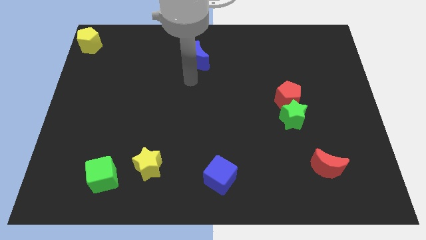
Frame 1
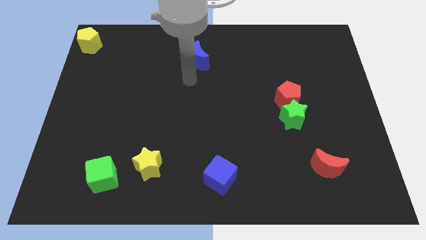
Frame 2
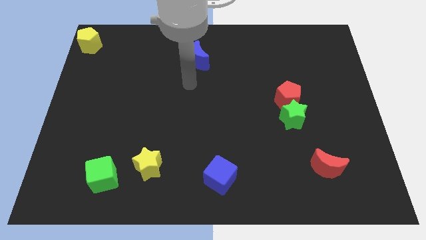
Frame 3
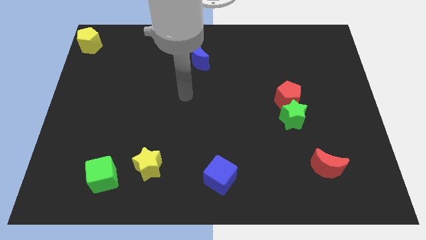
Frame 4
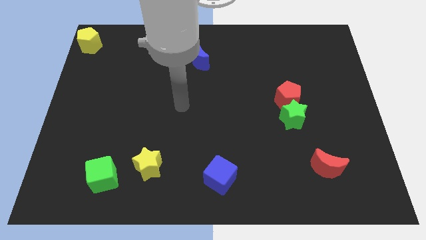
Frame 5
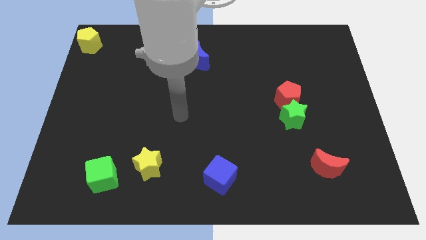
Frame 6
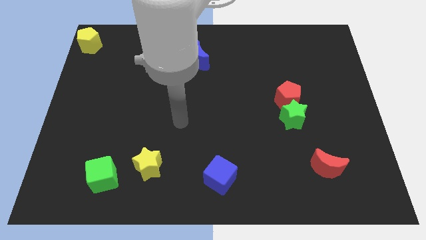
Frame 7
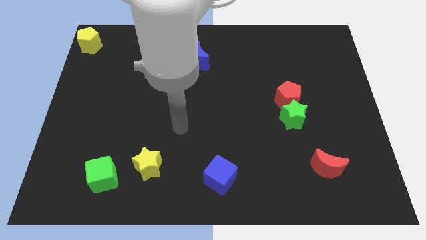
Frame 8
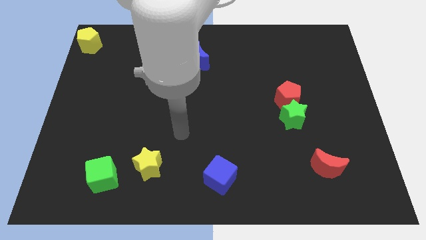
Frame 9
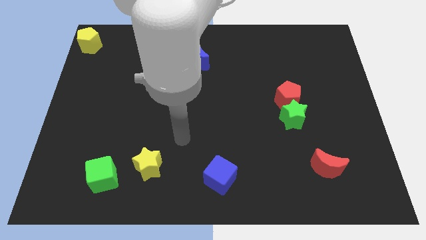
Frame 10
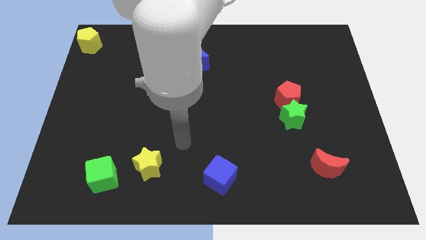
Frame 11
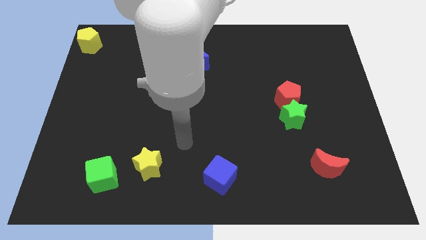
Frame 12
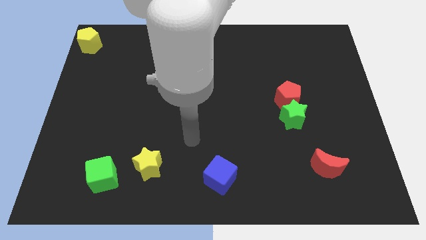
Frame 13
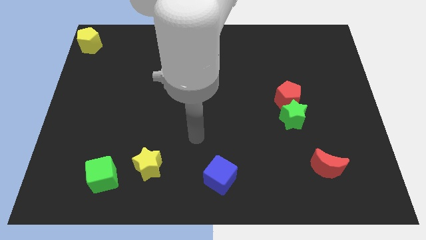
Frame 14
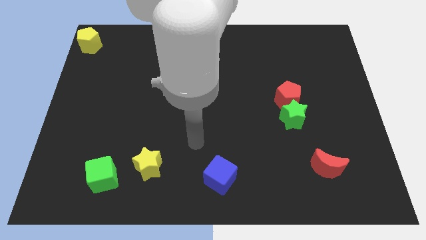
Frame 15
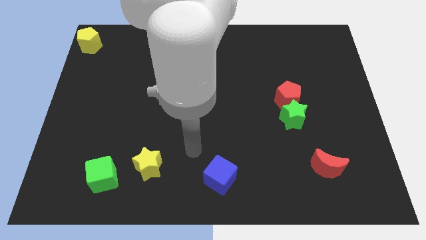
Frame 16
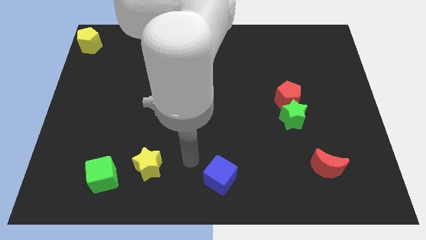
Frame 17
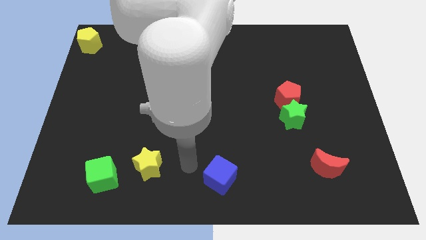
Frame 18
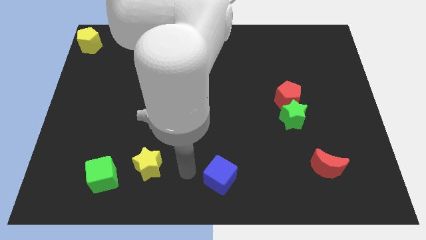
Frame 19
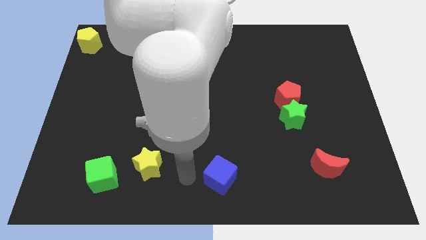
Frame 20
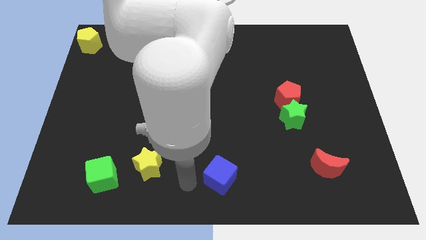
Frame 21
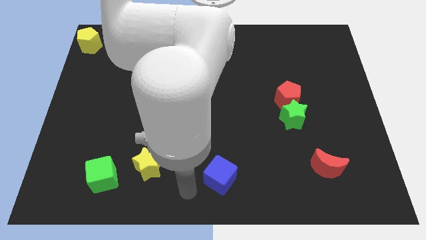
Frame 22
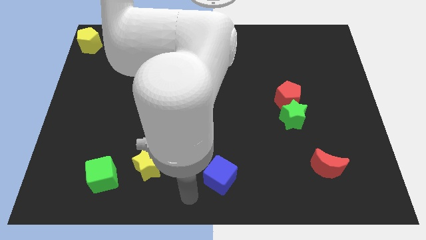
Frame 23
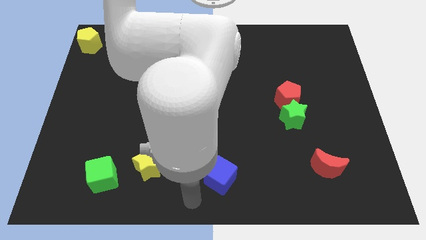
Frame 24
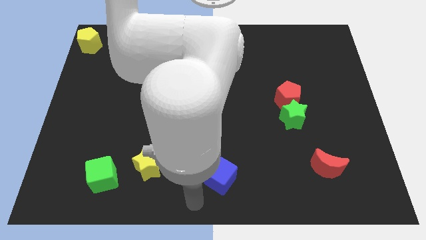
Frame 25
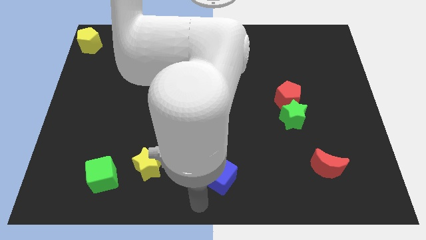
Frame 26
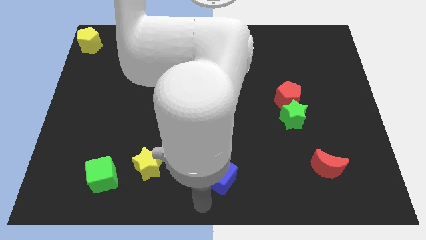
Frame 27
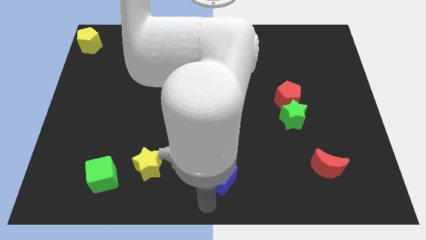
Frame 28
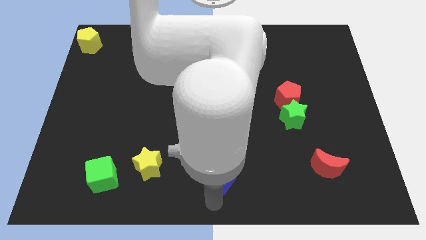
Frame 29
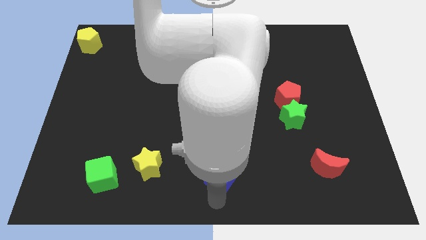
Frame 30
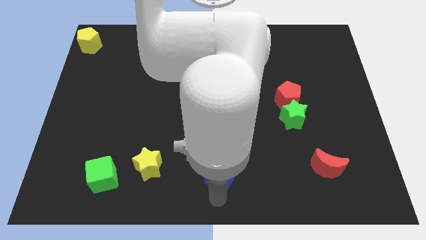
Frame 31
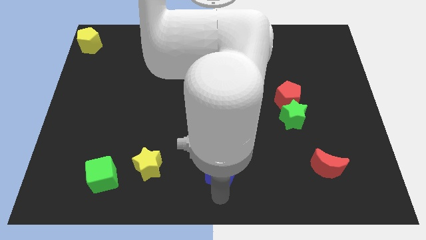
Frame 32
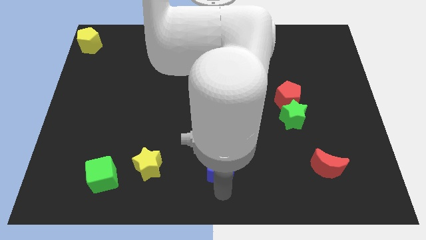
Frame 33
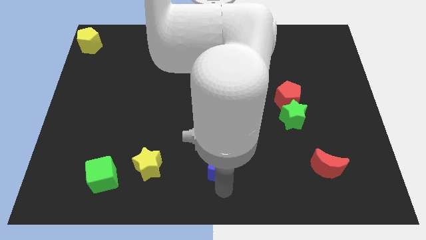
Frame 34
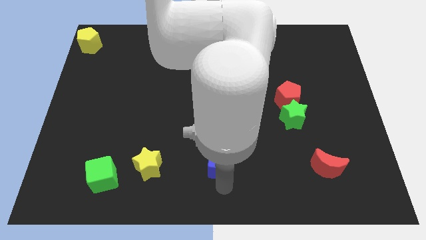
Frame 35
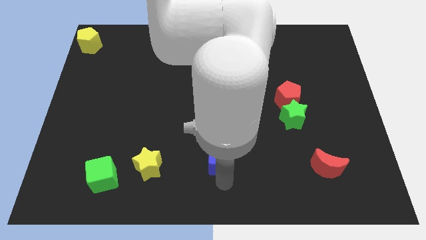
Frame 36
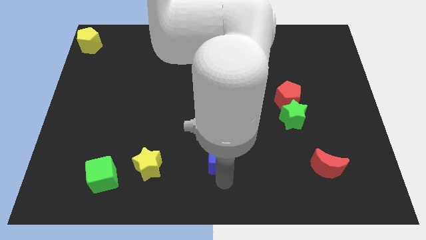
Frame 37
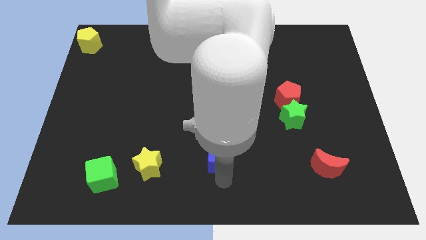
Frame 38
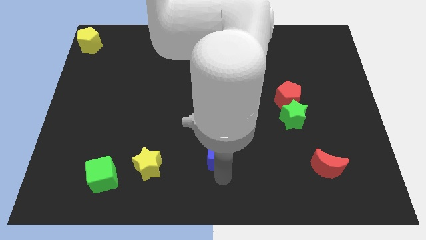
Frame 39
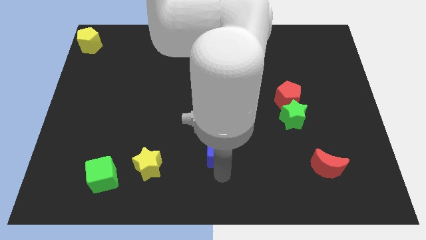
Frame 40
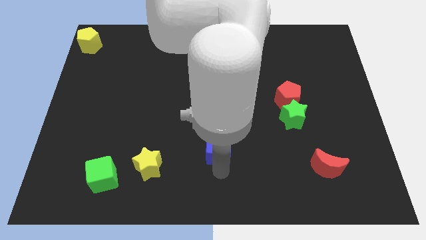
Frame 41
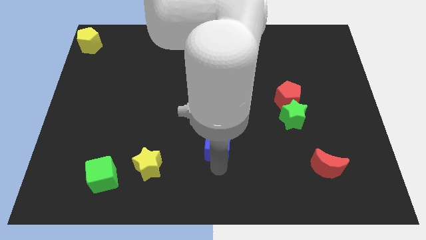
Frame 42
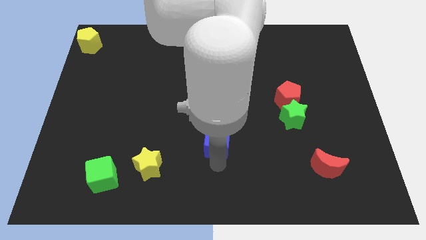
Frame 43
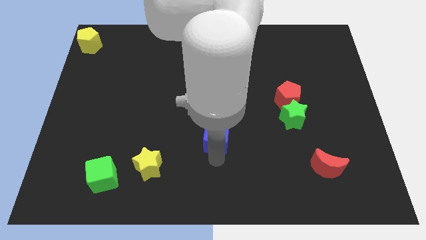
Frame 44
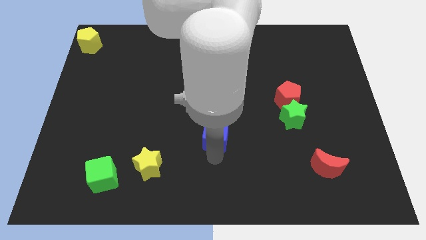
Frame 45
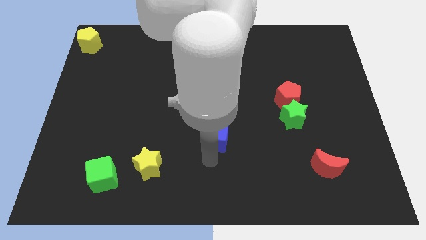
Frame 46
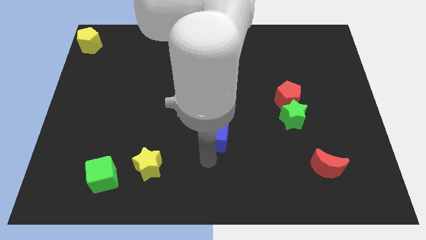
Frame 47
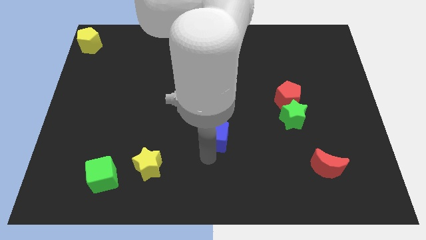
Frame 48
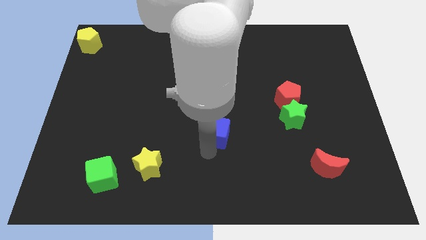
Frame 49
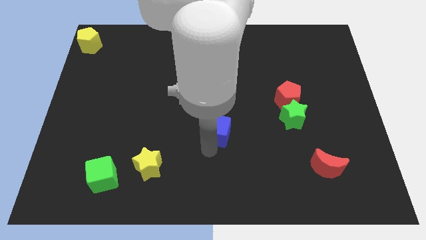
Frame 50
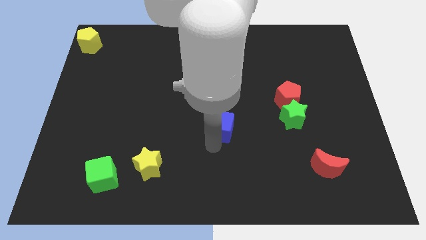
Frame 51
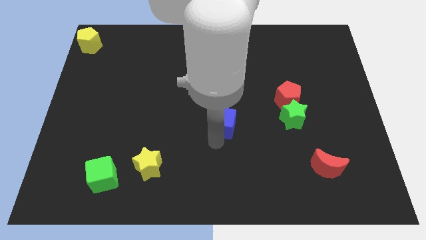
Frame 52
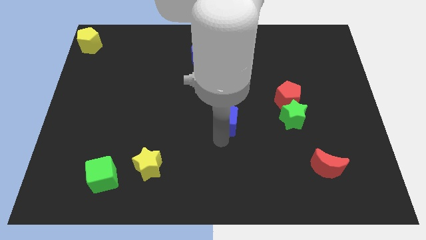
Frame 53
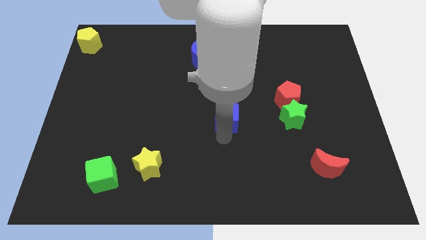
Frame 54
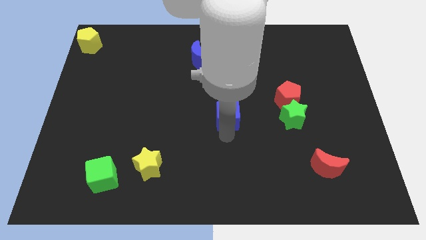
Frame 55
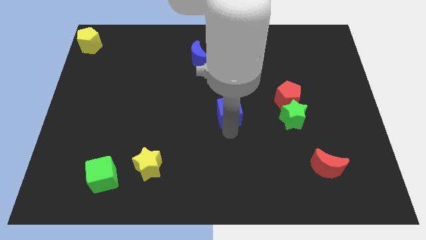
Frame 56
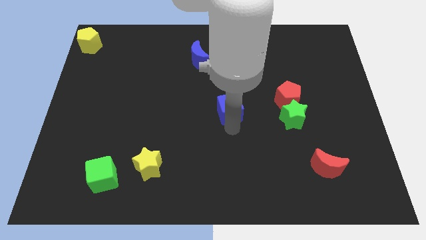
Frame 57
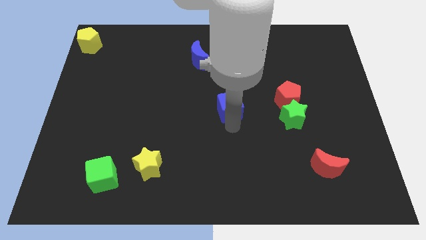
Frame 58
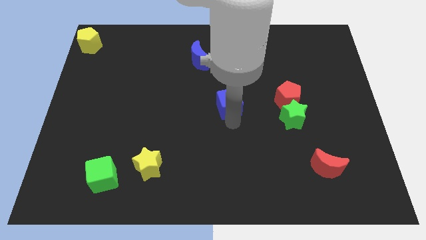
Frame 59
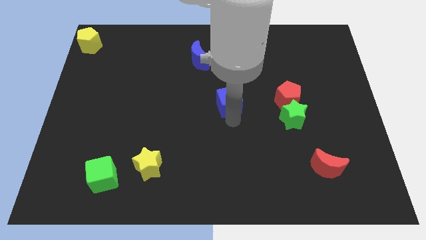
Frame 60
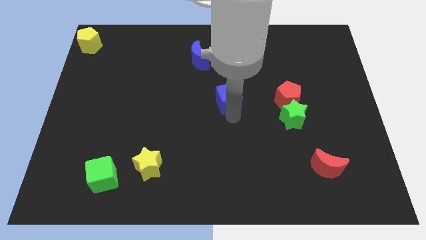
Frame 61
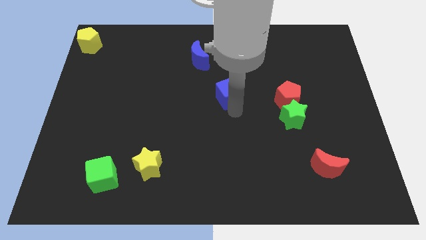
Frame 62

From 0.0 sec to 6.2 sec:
push the blue cube to the left of the red pentagon

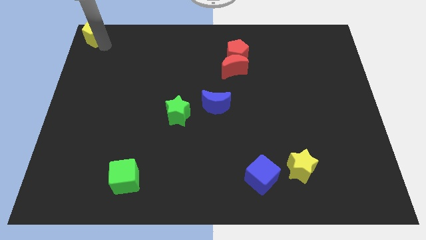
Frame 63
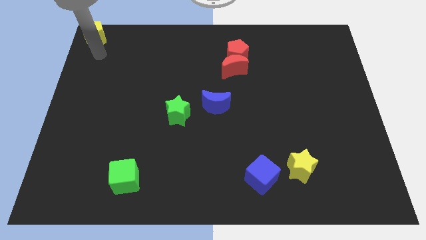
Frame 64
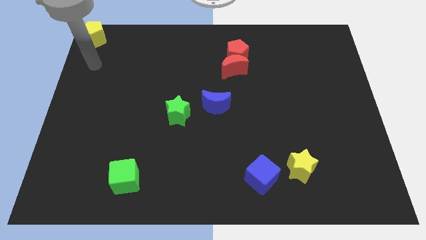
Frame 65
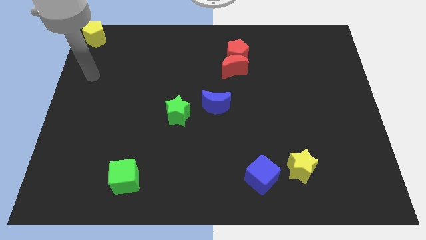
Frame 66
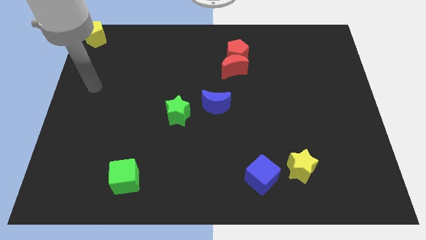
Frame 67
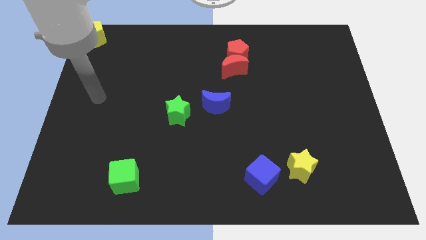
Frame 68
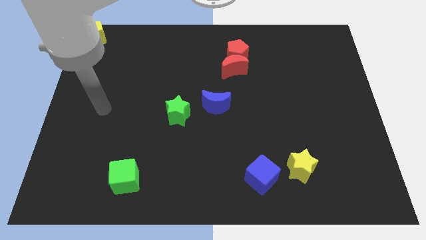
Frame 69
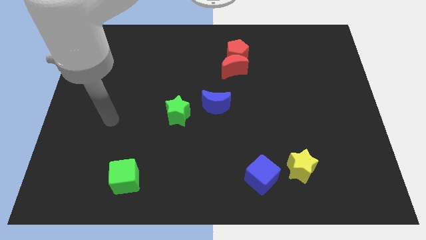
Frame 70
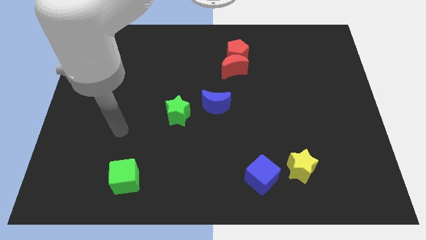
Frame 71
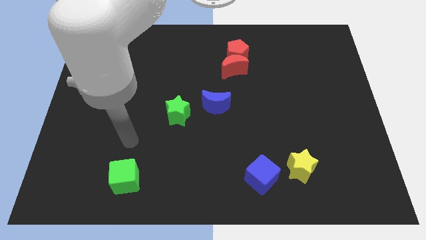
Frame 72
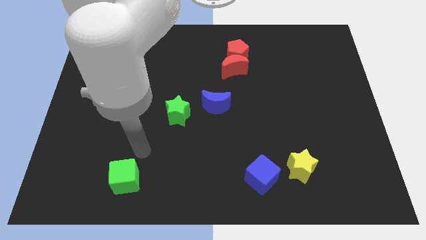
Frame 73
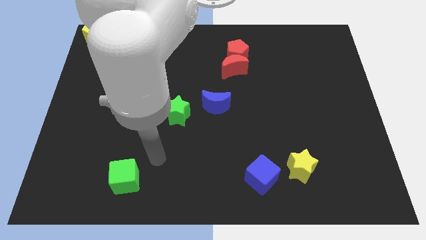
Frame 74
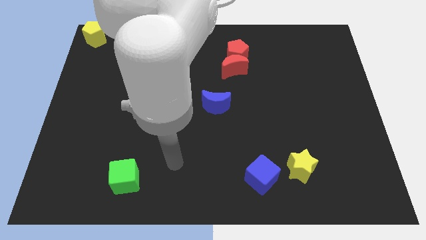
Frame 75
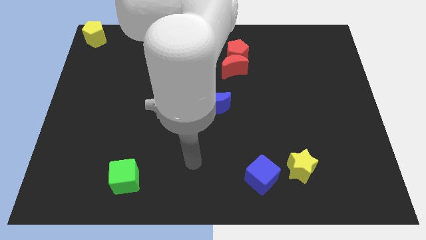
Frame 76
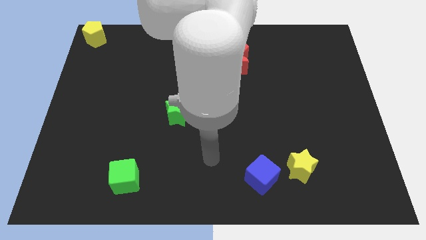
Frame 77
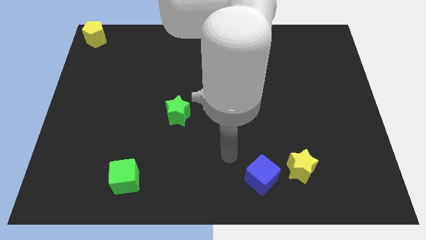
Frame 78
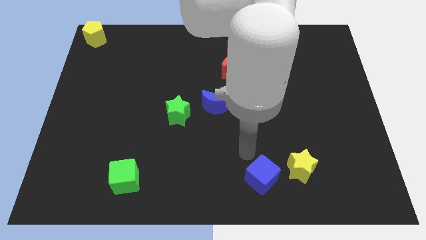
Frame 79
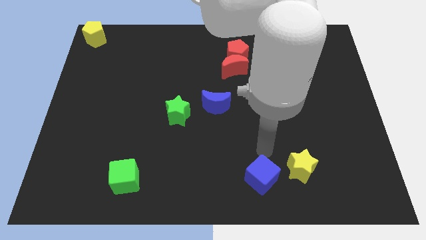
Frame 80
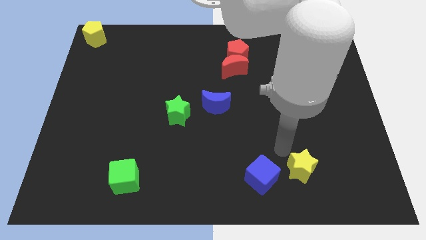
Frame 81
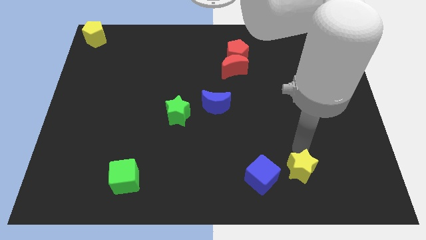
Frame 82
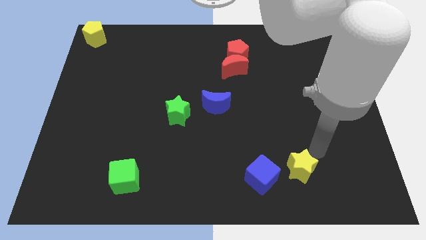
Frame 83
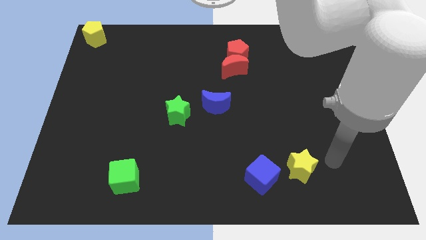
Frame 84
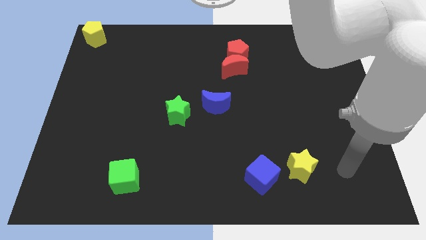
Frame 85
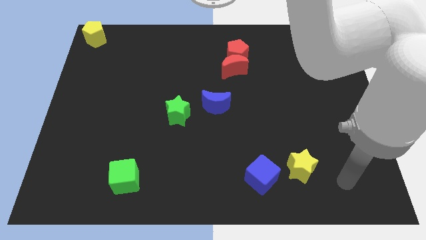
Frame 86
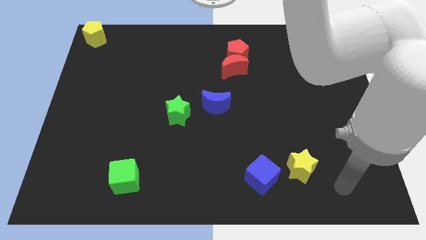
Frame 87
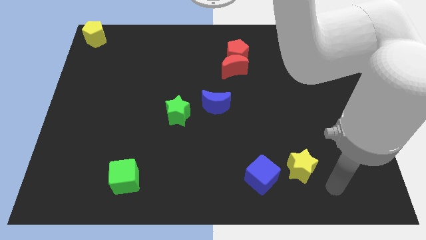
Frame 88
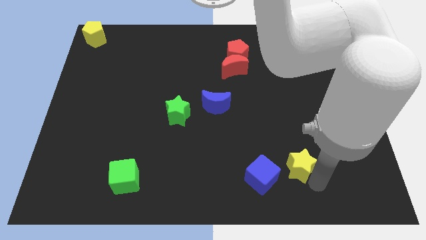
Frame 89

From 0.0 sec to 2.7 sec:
move your arm away from the yellow pentagon
